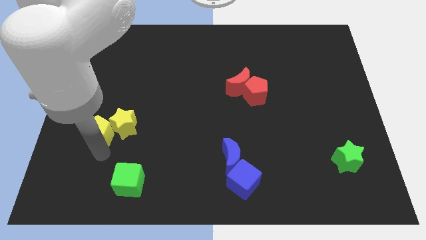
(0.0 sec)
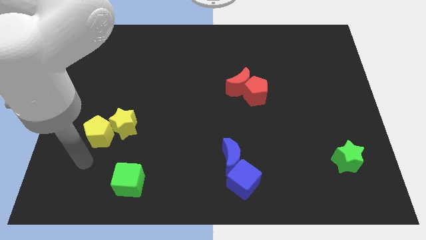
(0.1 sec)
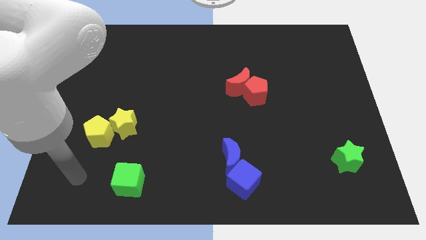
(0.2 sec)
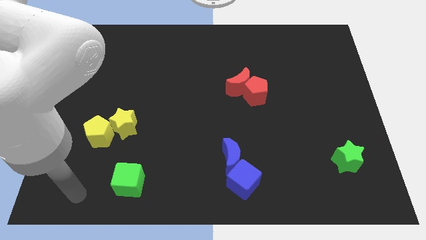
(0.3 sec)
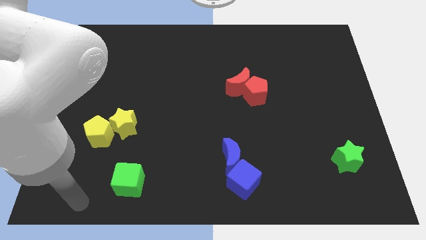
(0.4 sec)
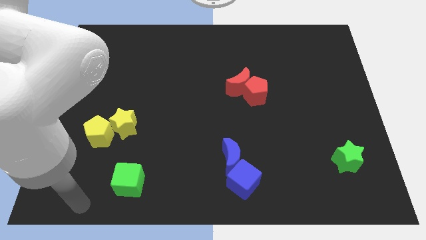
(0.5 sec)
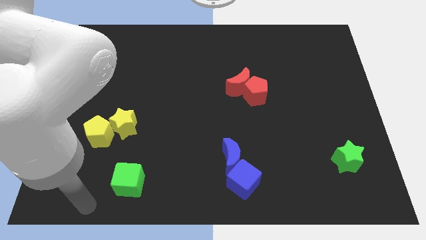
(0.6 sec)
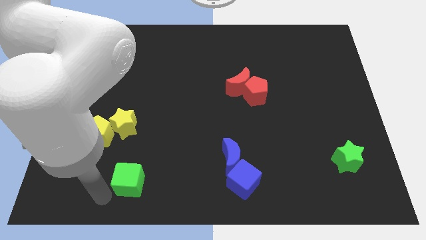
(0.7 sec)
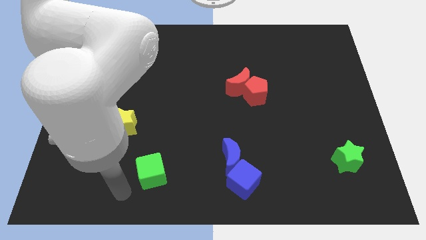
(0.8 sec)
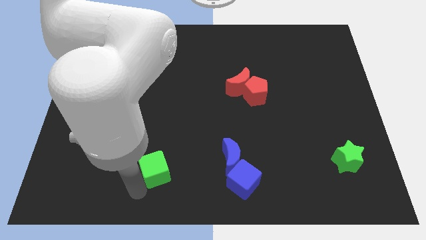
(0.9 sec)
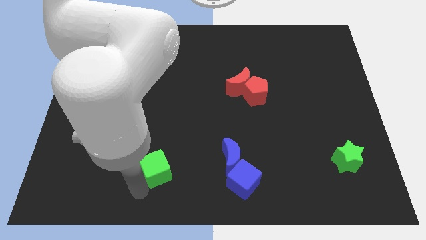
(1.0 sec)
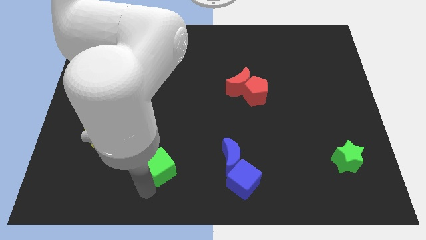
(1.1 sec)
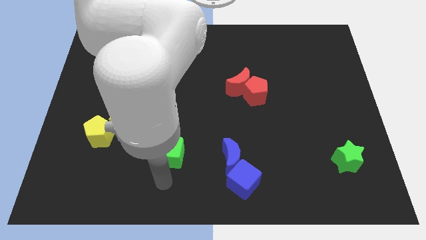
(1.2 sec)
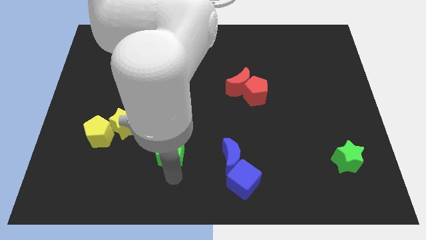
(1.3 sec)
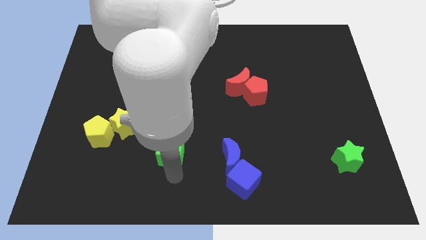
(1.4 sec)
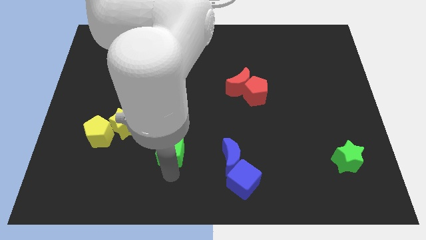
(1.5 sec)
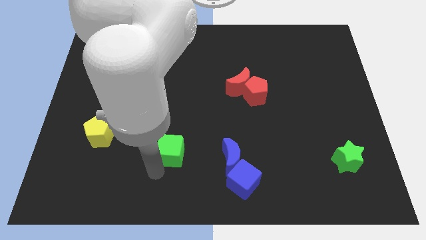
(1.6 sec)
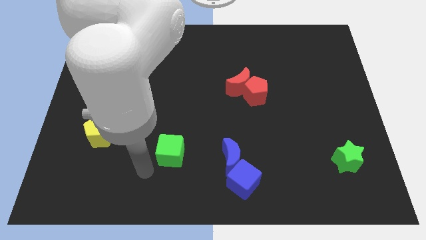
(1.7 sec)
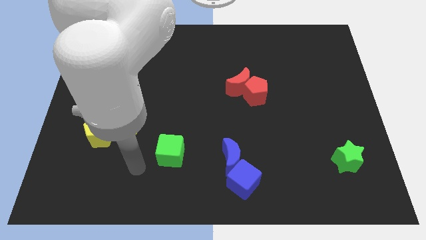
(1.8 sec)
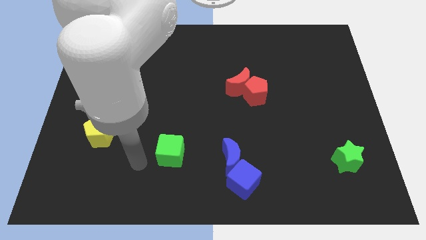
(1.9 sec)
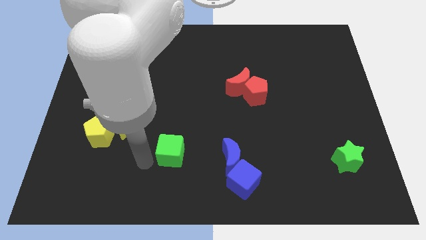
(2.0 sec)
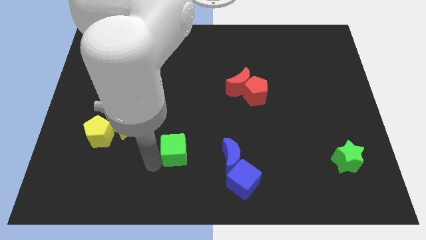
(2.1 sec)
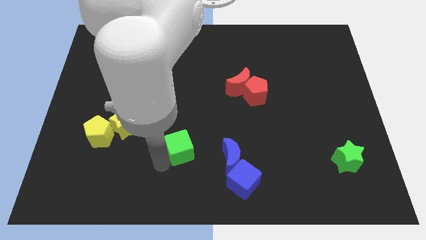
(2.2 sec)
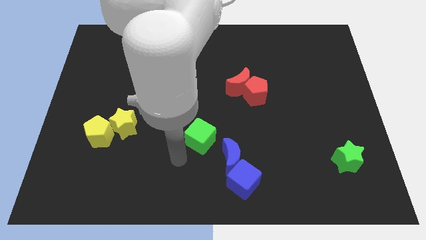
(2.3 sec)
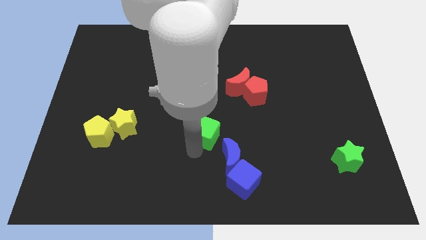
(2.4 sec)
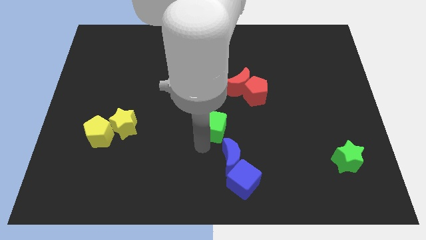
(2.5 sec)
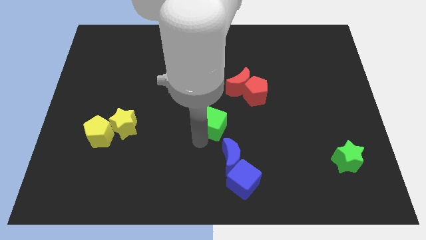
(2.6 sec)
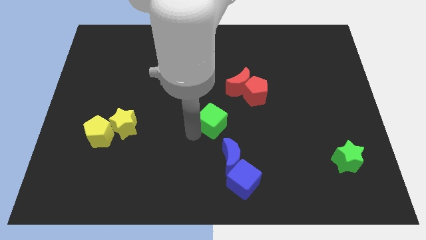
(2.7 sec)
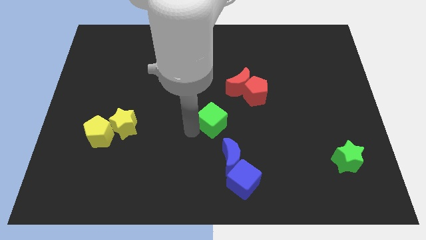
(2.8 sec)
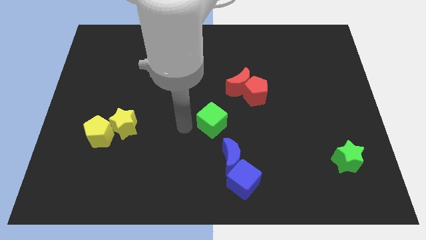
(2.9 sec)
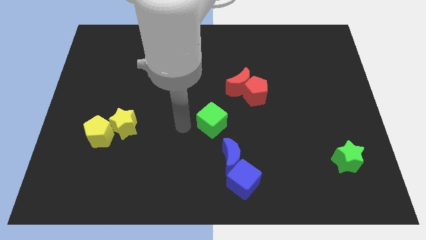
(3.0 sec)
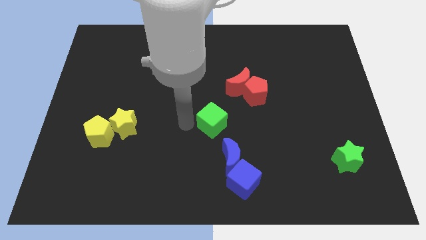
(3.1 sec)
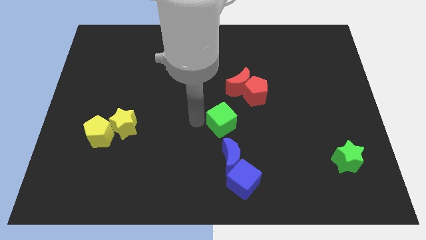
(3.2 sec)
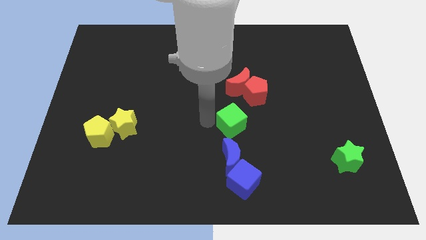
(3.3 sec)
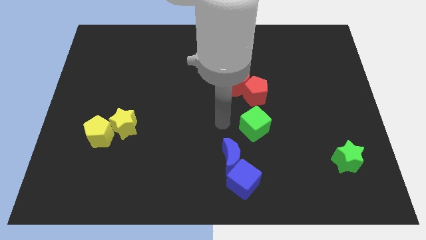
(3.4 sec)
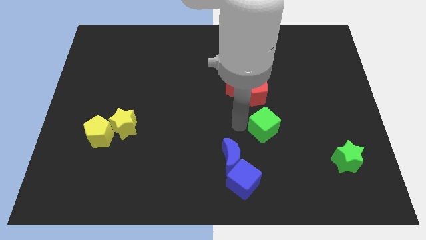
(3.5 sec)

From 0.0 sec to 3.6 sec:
move the green cube to the bottom of the red pentagon

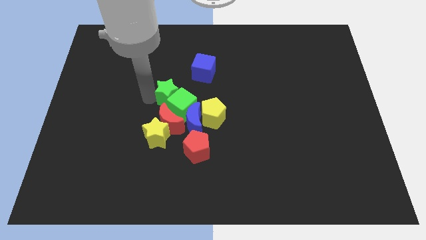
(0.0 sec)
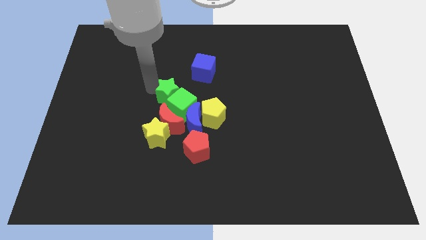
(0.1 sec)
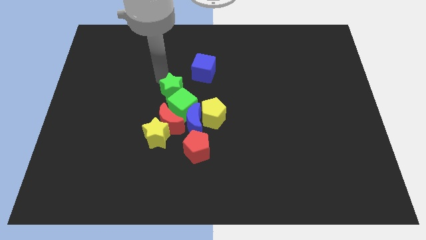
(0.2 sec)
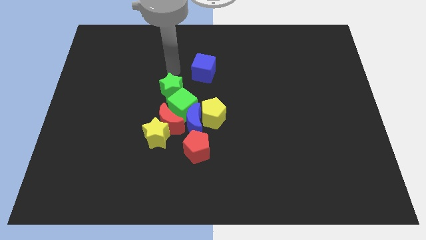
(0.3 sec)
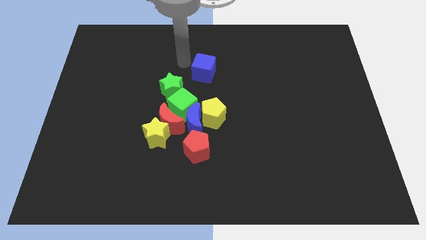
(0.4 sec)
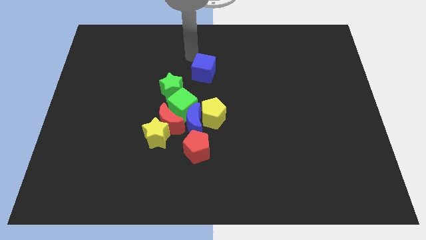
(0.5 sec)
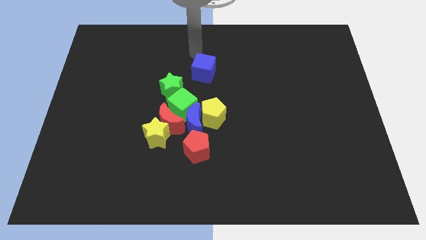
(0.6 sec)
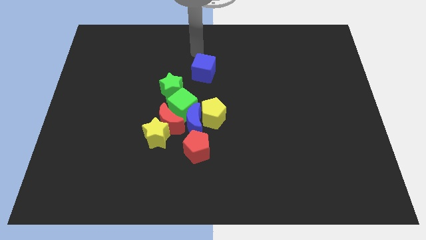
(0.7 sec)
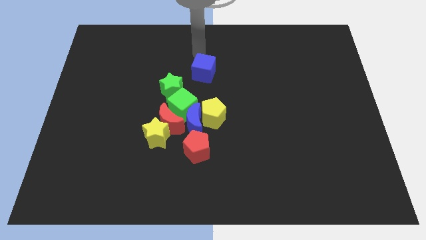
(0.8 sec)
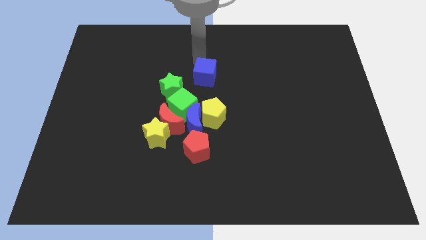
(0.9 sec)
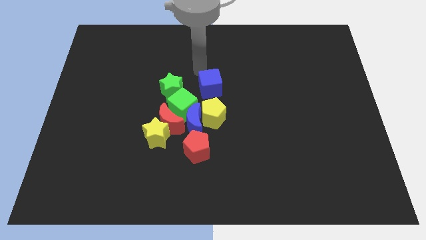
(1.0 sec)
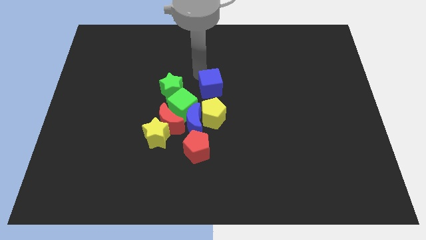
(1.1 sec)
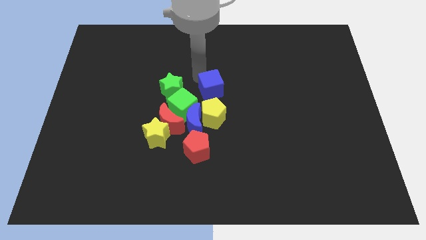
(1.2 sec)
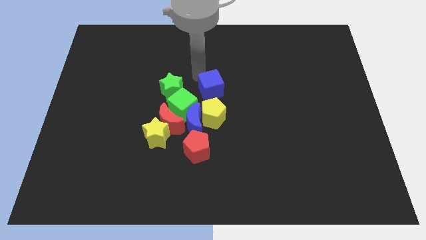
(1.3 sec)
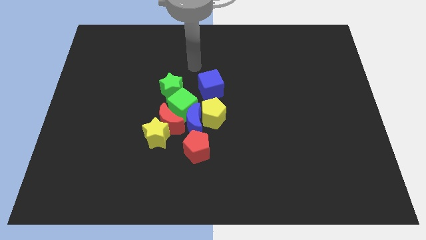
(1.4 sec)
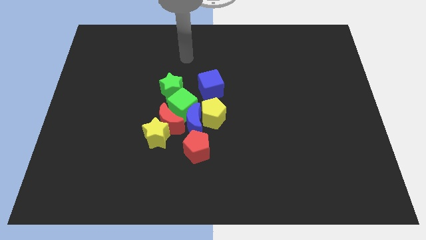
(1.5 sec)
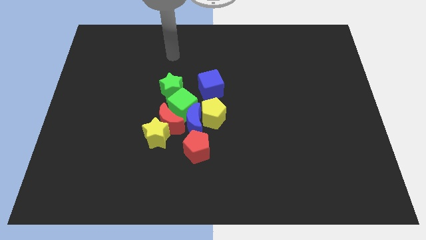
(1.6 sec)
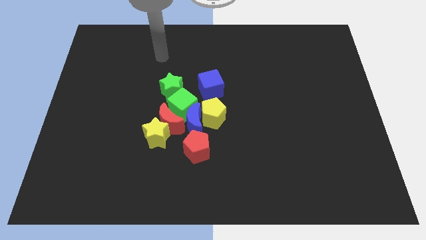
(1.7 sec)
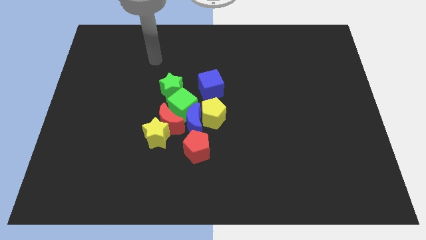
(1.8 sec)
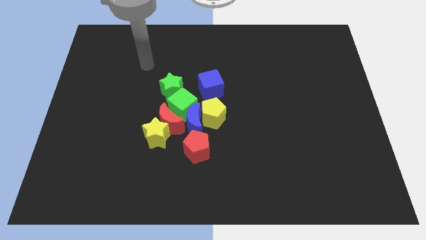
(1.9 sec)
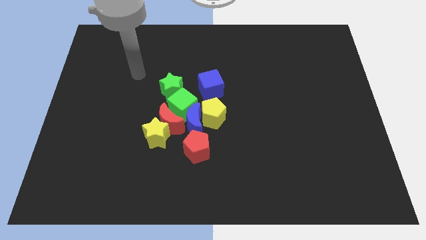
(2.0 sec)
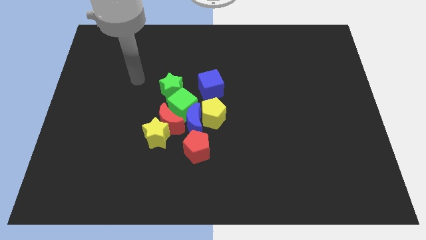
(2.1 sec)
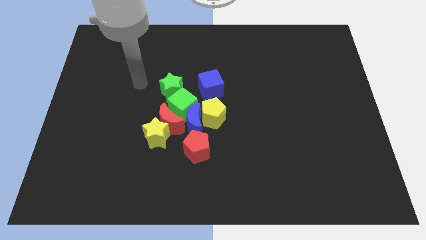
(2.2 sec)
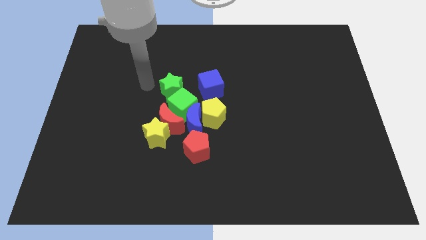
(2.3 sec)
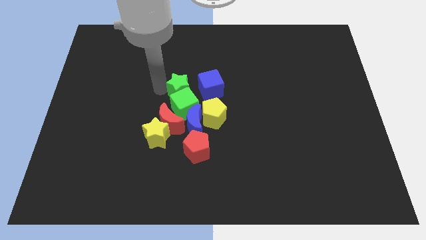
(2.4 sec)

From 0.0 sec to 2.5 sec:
place the arm left to the green star

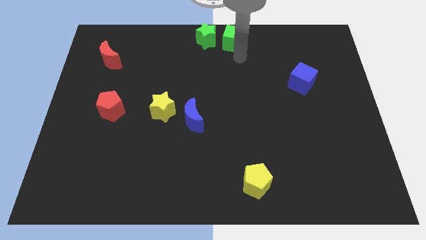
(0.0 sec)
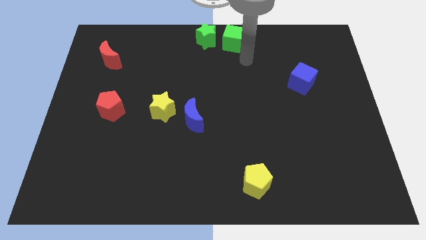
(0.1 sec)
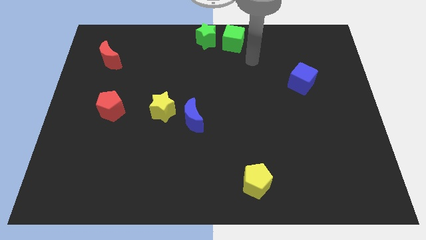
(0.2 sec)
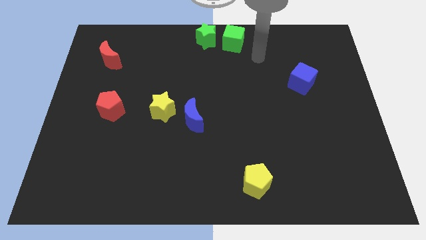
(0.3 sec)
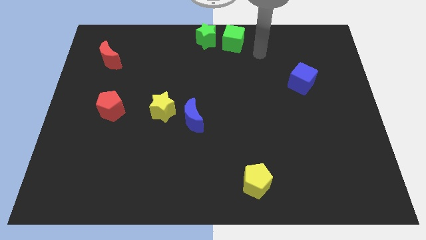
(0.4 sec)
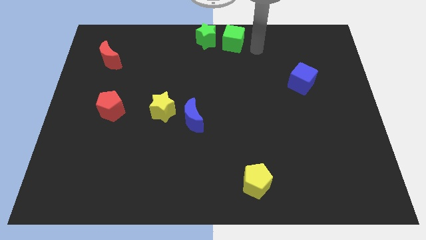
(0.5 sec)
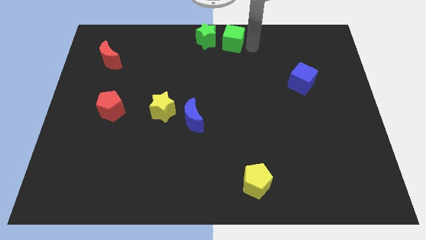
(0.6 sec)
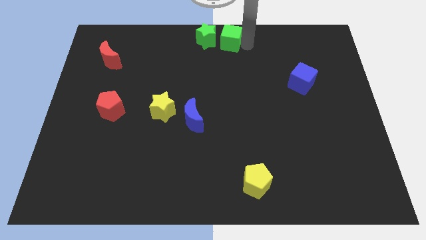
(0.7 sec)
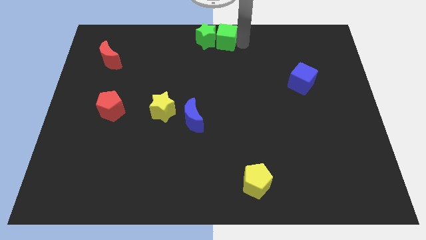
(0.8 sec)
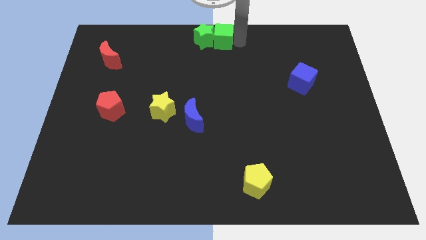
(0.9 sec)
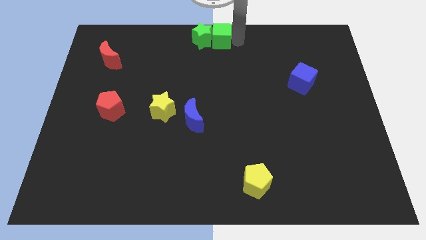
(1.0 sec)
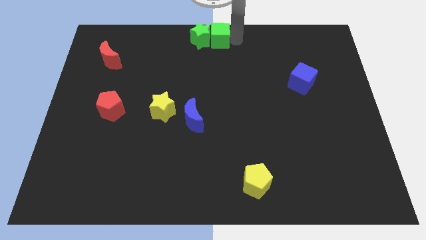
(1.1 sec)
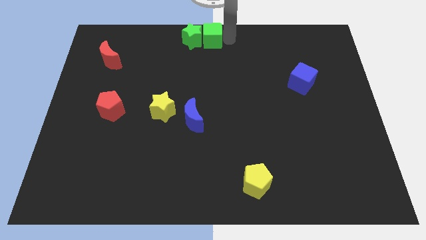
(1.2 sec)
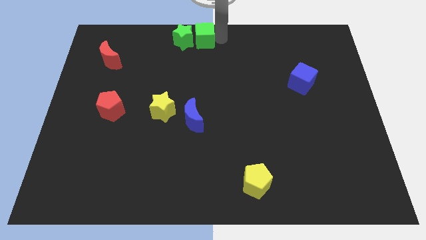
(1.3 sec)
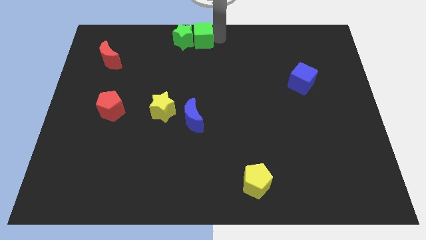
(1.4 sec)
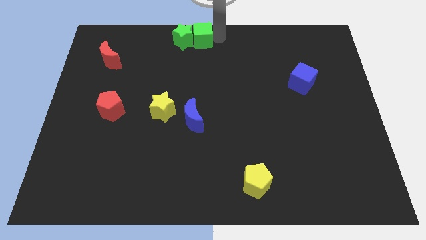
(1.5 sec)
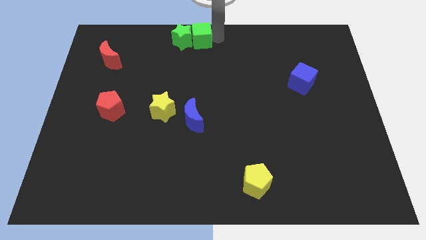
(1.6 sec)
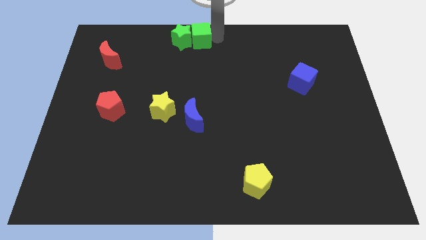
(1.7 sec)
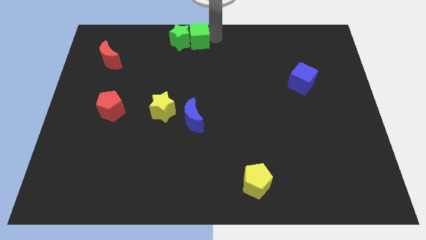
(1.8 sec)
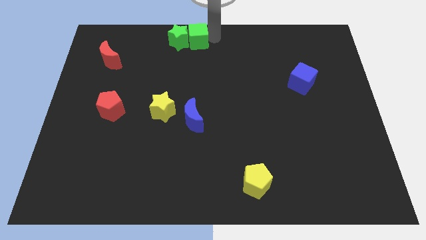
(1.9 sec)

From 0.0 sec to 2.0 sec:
move green square to the top center

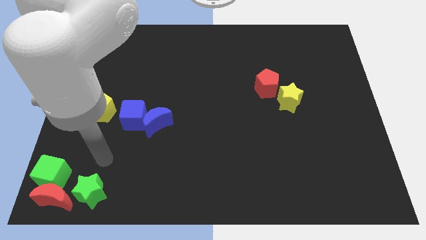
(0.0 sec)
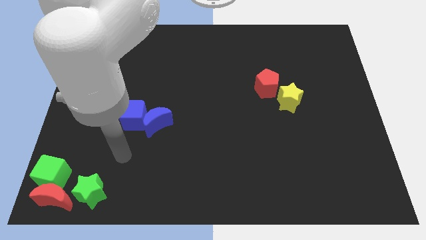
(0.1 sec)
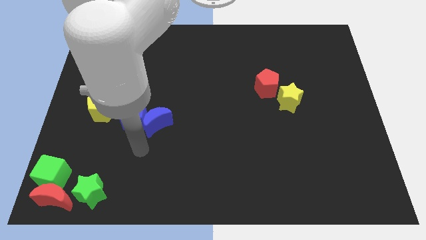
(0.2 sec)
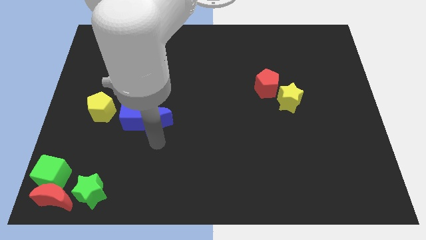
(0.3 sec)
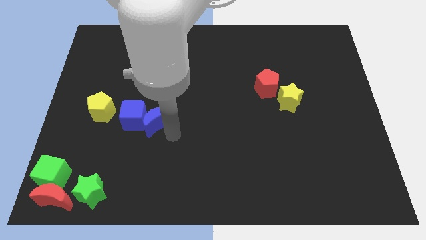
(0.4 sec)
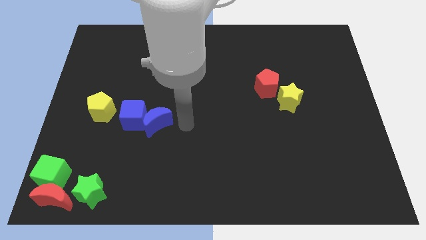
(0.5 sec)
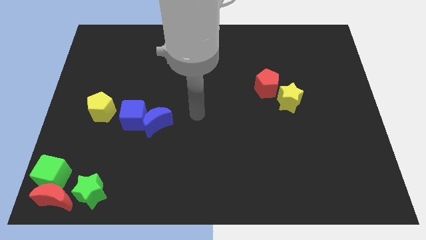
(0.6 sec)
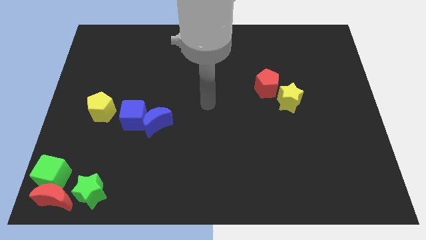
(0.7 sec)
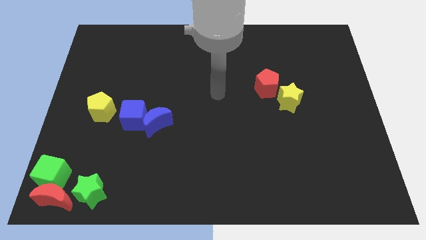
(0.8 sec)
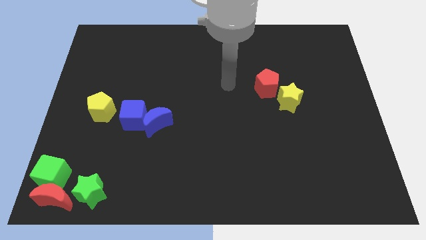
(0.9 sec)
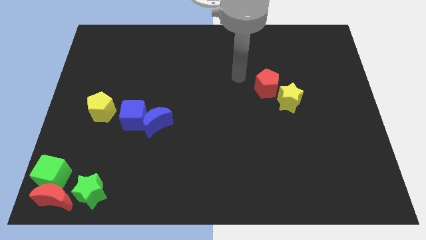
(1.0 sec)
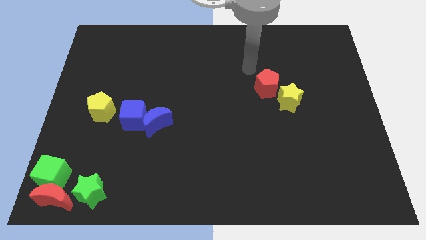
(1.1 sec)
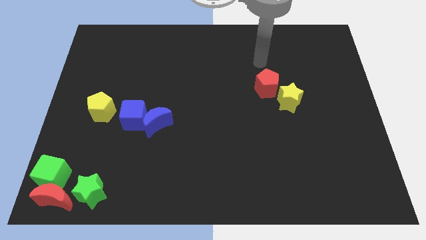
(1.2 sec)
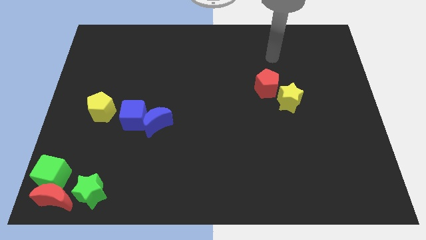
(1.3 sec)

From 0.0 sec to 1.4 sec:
go and point your arm at the top side of the red pentagon
